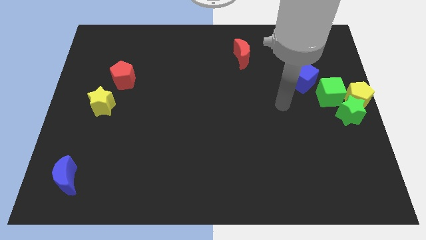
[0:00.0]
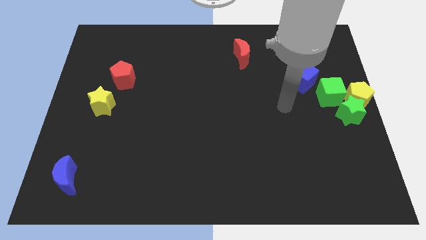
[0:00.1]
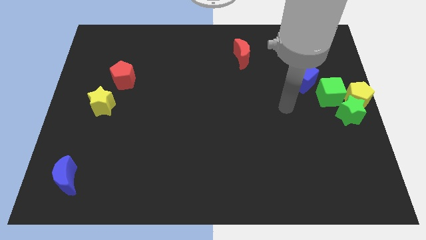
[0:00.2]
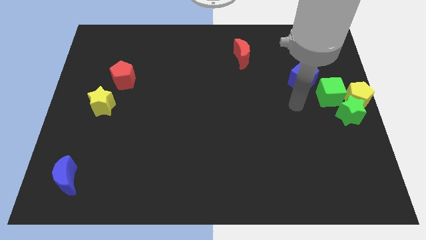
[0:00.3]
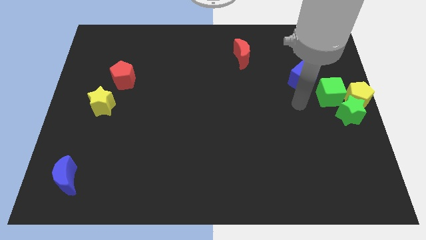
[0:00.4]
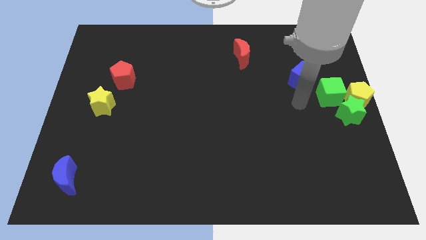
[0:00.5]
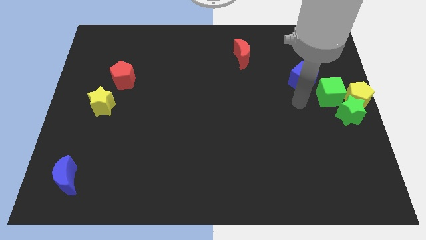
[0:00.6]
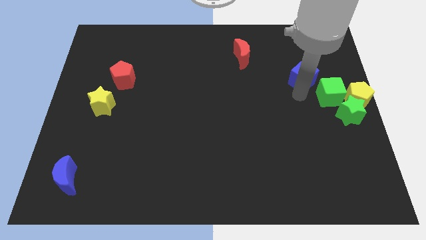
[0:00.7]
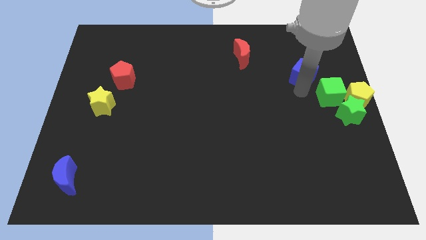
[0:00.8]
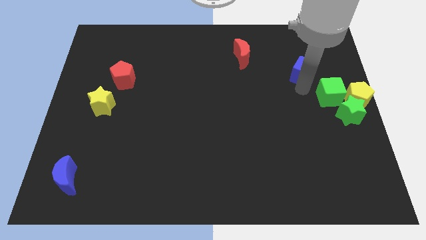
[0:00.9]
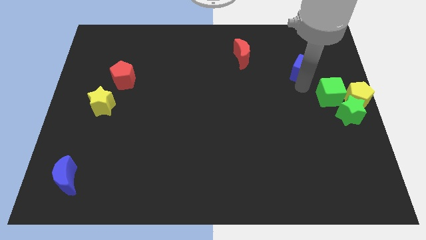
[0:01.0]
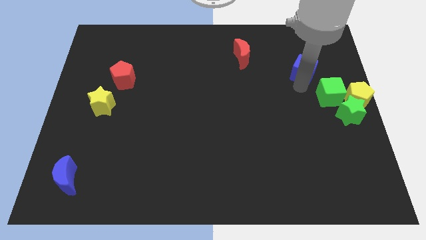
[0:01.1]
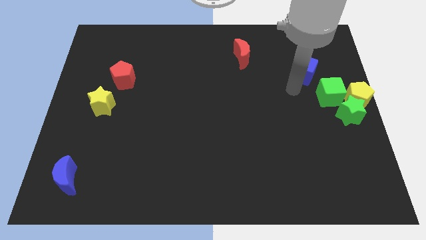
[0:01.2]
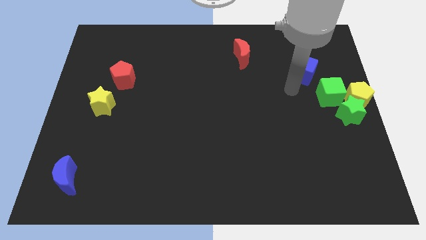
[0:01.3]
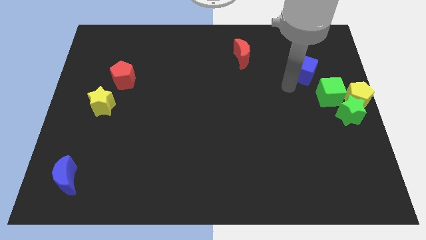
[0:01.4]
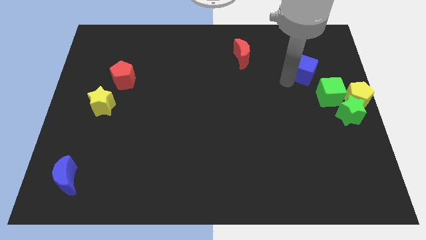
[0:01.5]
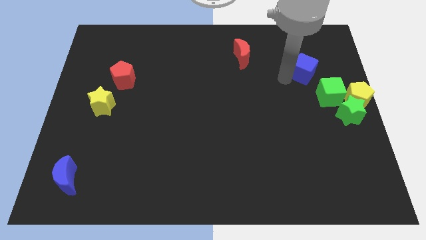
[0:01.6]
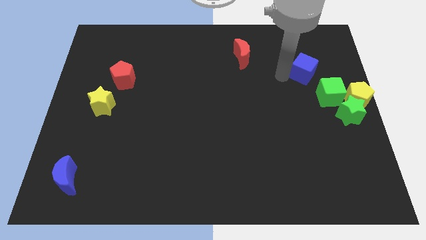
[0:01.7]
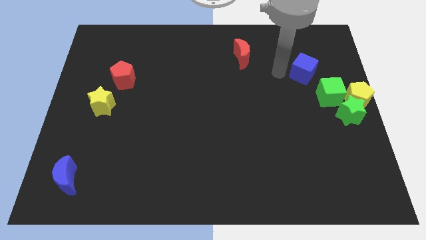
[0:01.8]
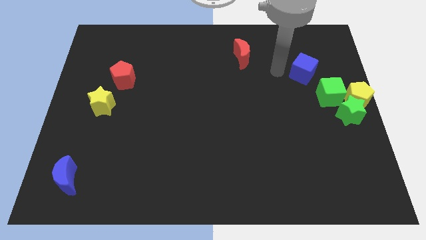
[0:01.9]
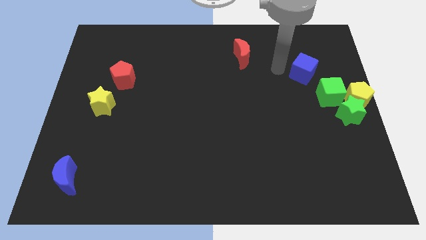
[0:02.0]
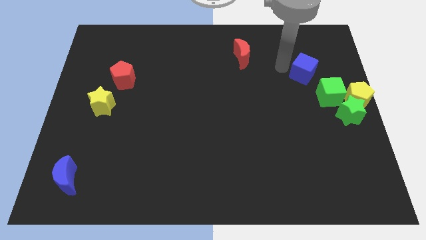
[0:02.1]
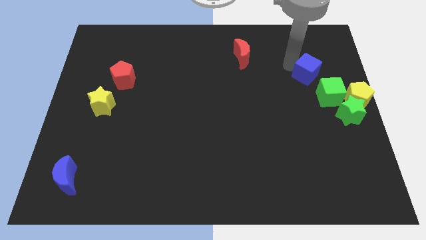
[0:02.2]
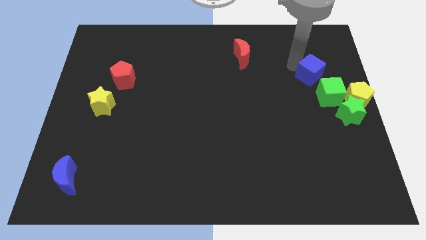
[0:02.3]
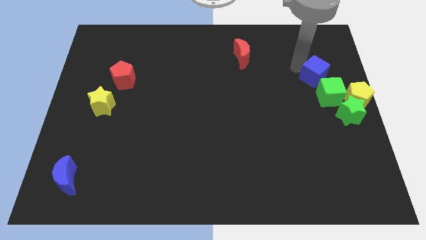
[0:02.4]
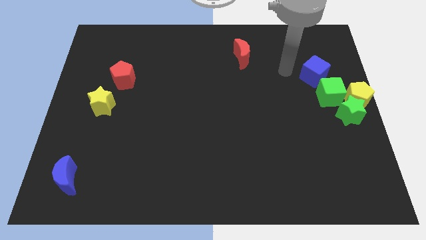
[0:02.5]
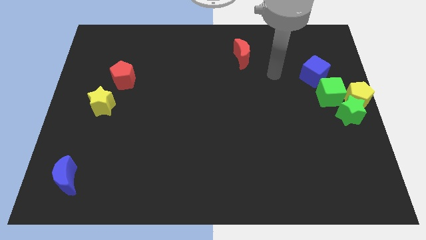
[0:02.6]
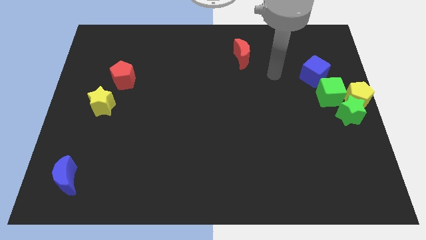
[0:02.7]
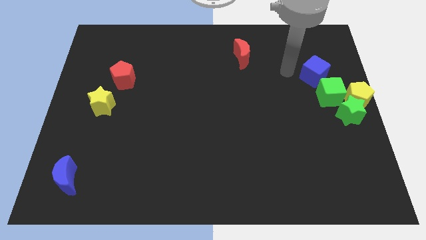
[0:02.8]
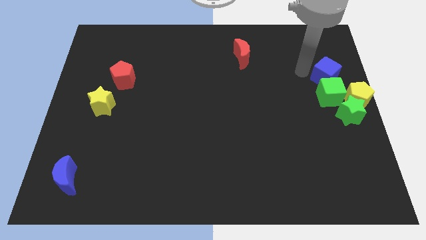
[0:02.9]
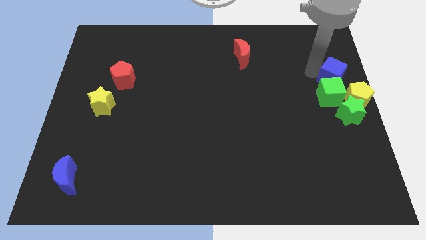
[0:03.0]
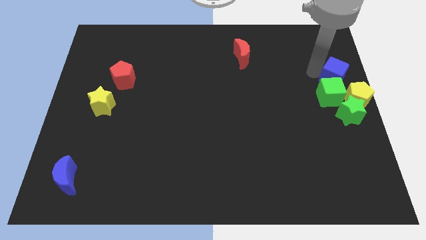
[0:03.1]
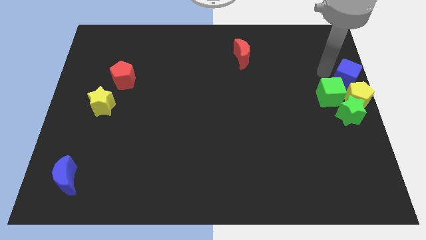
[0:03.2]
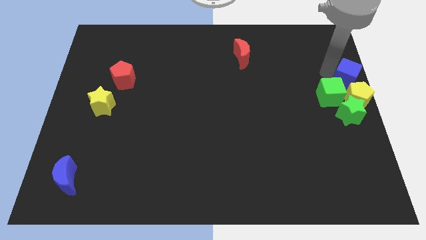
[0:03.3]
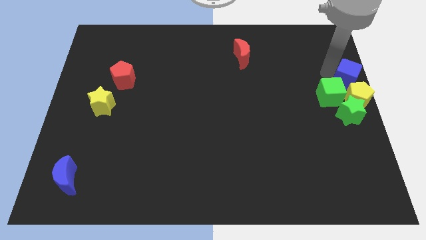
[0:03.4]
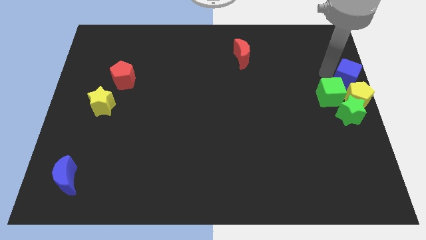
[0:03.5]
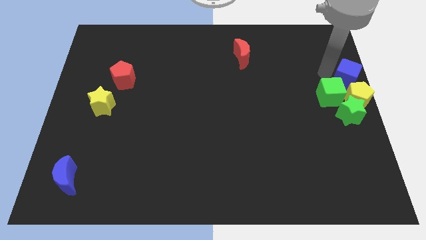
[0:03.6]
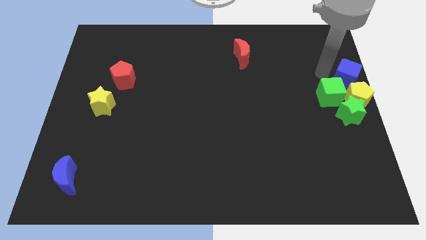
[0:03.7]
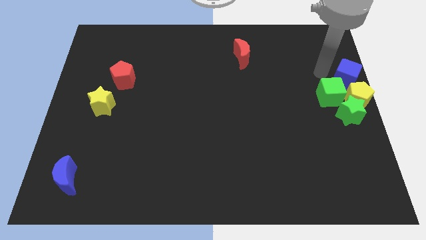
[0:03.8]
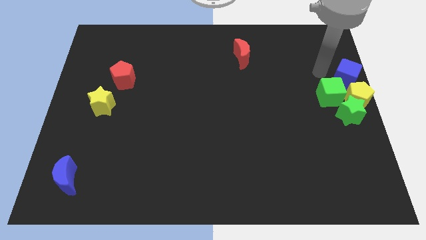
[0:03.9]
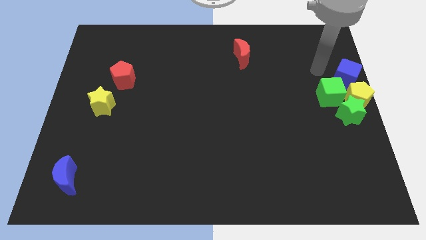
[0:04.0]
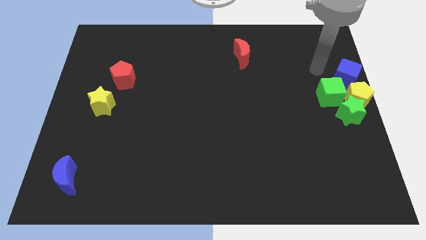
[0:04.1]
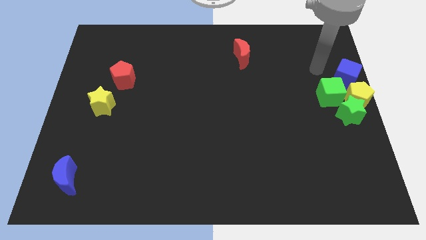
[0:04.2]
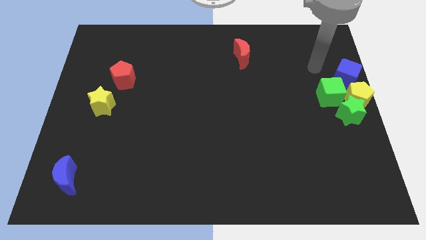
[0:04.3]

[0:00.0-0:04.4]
push the blue cube diagonally to teh top left of the yellow pentagon

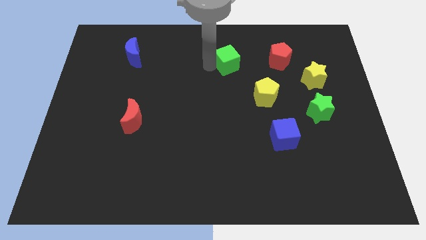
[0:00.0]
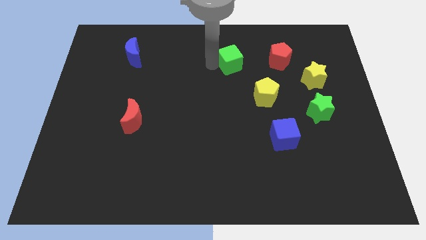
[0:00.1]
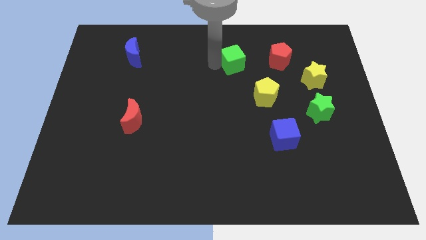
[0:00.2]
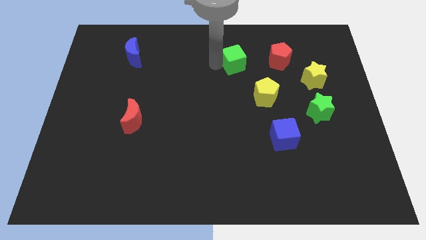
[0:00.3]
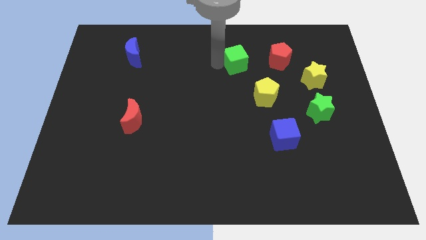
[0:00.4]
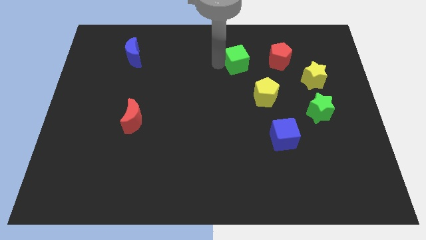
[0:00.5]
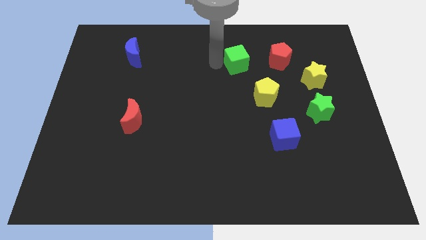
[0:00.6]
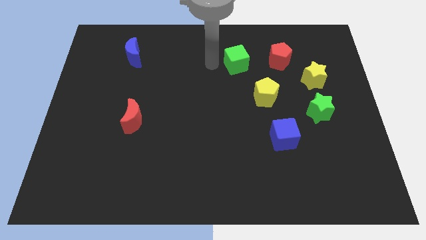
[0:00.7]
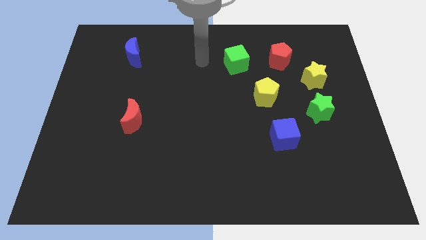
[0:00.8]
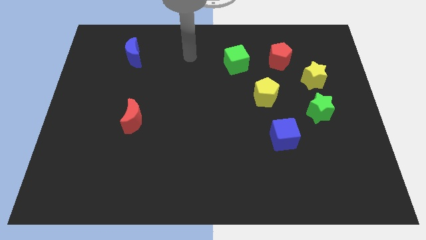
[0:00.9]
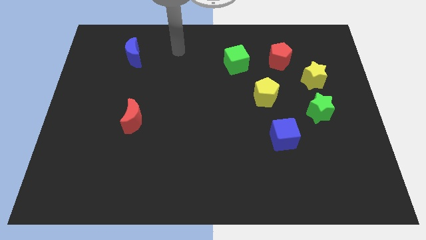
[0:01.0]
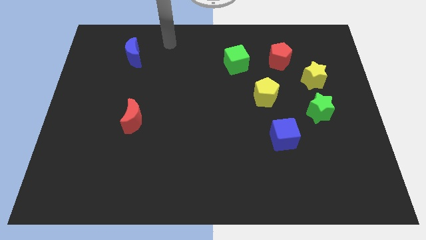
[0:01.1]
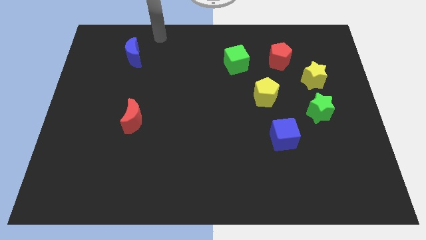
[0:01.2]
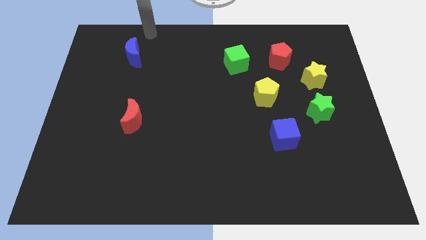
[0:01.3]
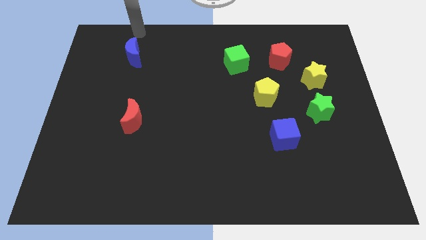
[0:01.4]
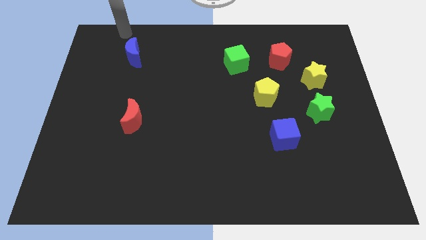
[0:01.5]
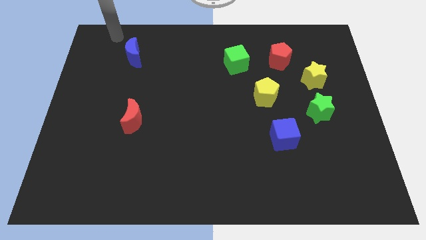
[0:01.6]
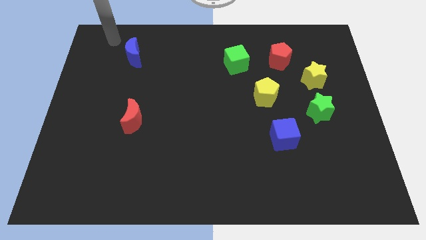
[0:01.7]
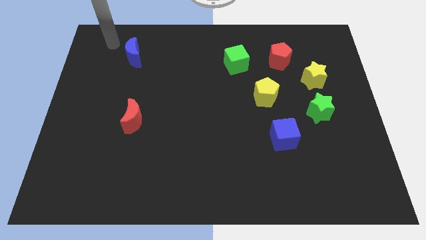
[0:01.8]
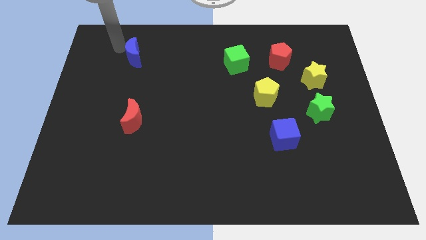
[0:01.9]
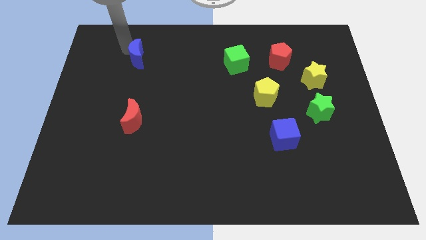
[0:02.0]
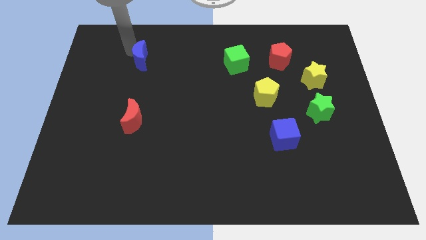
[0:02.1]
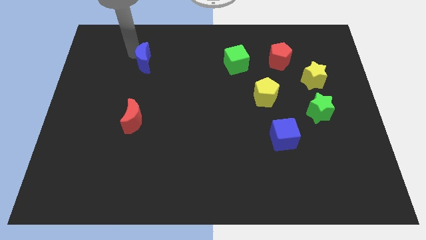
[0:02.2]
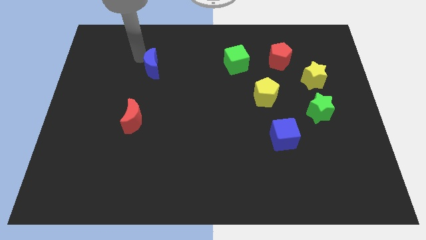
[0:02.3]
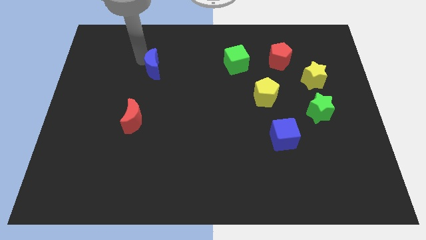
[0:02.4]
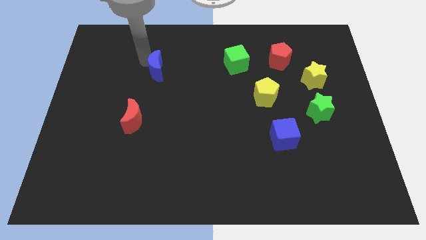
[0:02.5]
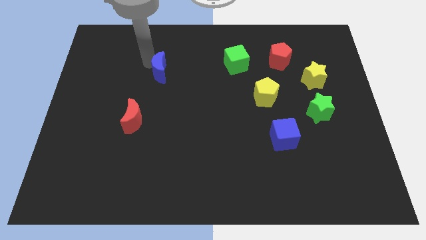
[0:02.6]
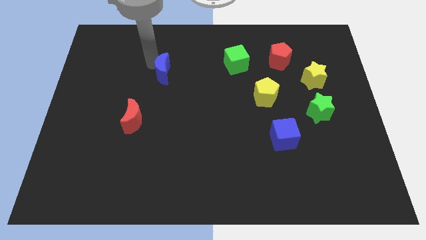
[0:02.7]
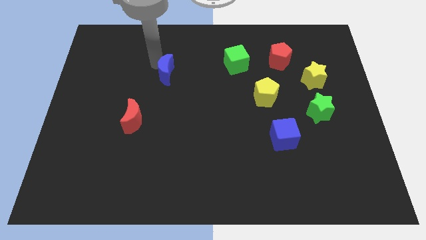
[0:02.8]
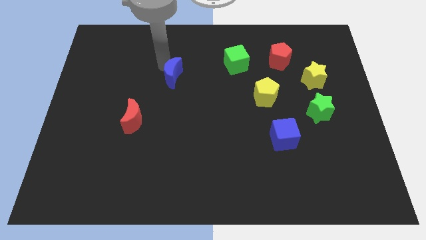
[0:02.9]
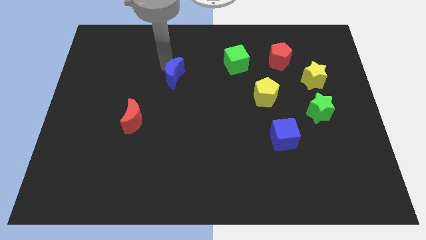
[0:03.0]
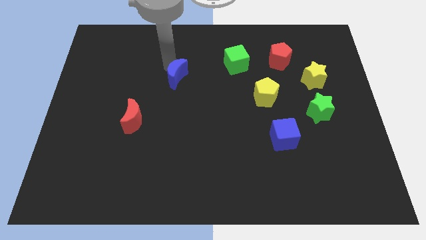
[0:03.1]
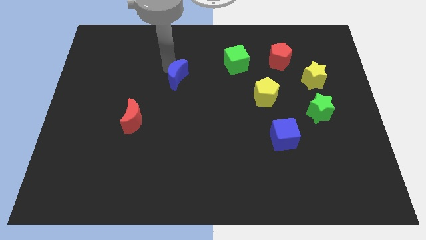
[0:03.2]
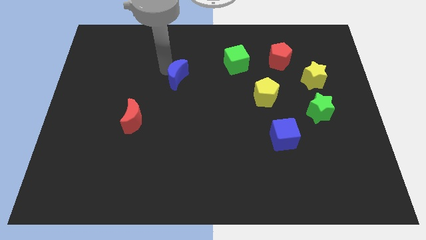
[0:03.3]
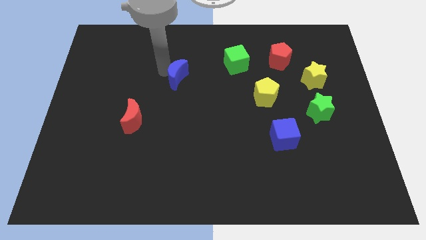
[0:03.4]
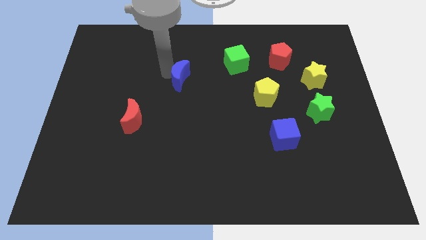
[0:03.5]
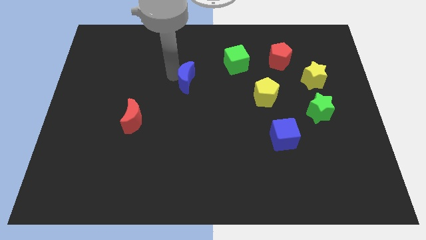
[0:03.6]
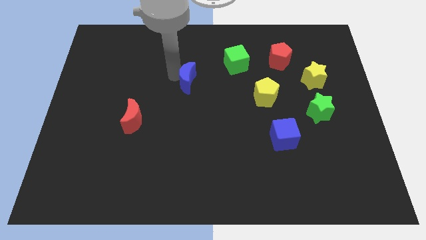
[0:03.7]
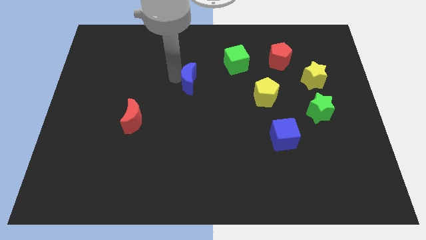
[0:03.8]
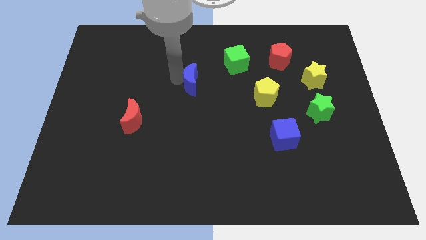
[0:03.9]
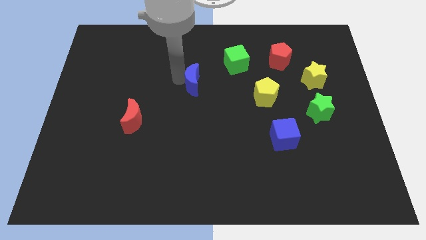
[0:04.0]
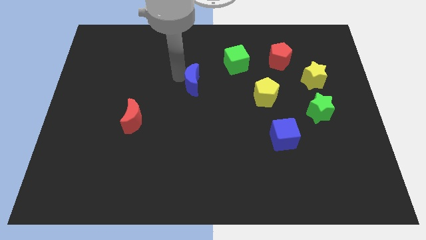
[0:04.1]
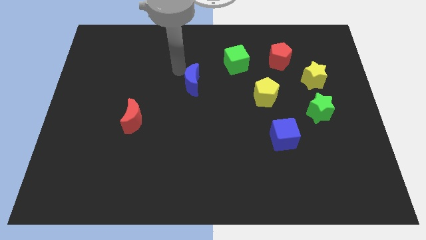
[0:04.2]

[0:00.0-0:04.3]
move your arm away from the green cube

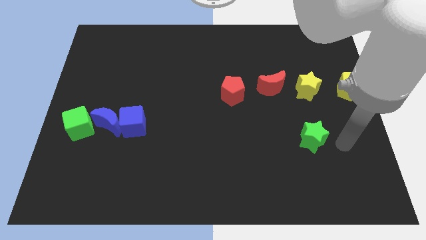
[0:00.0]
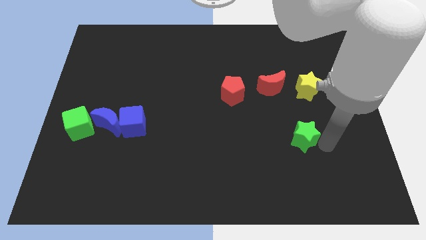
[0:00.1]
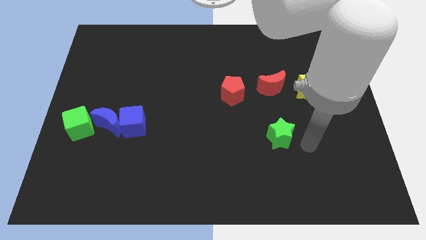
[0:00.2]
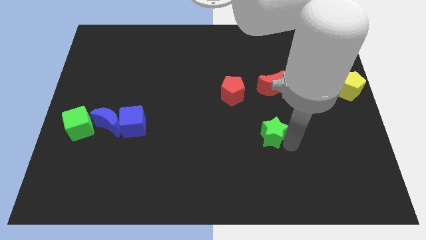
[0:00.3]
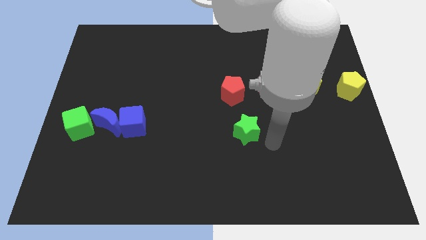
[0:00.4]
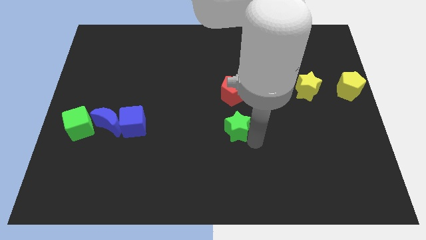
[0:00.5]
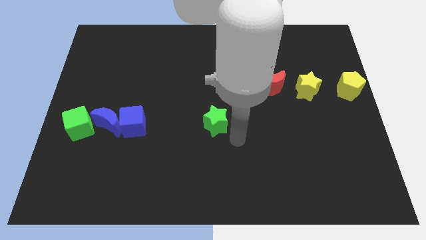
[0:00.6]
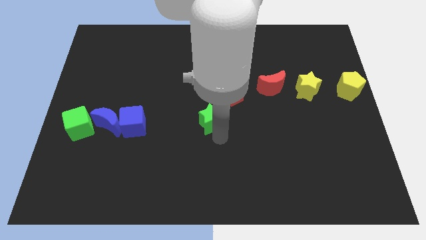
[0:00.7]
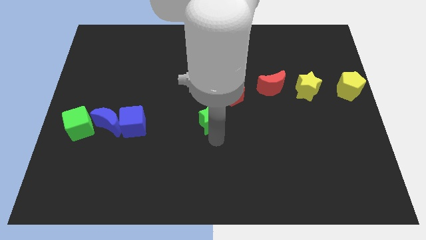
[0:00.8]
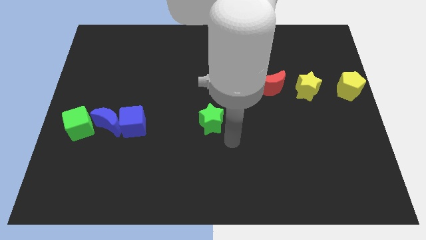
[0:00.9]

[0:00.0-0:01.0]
move the green star towards the center of the board
